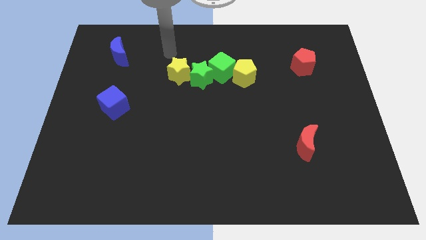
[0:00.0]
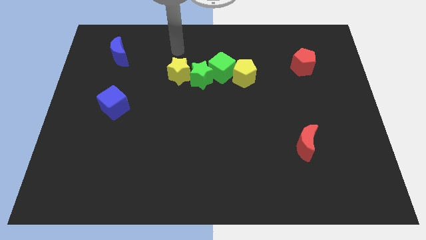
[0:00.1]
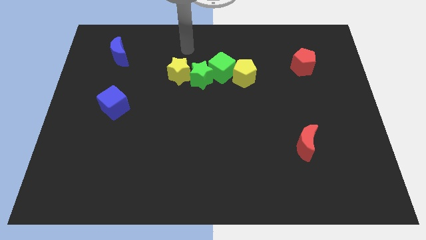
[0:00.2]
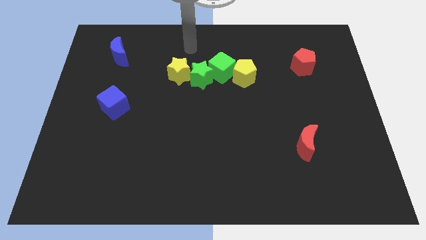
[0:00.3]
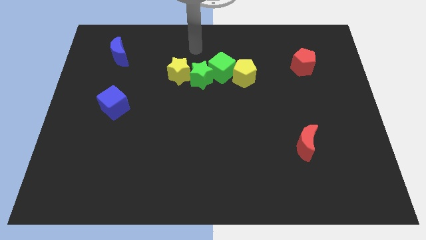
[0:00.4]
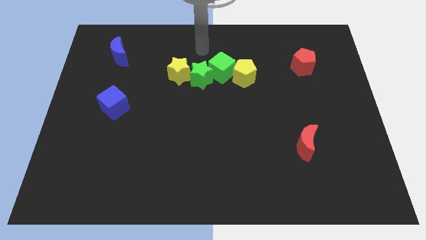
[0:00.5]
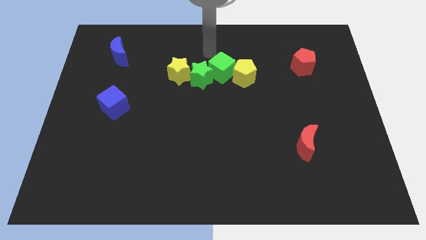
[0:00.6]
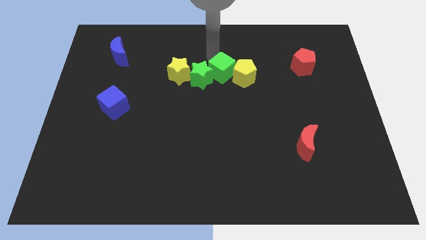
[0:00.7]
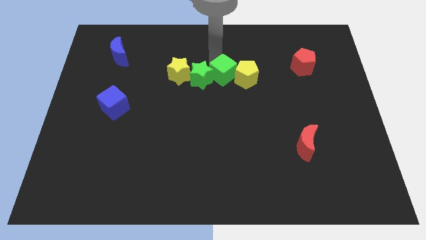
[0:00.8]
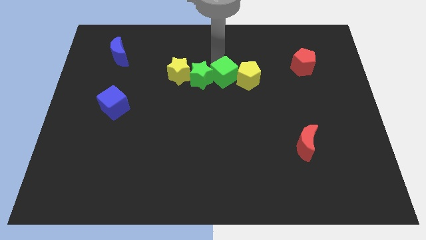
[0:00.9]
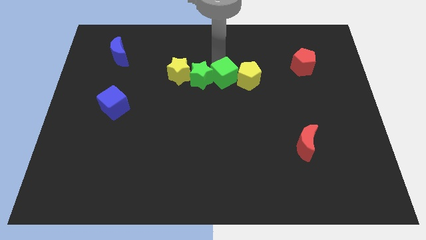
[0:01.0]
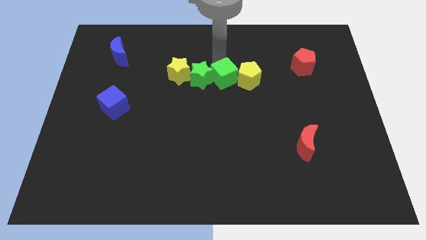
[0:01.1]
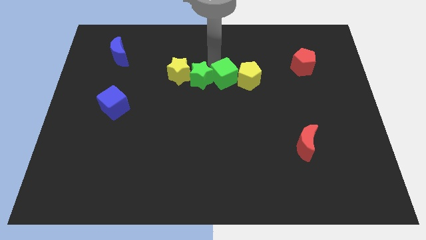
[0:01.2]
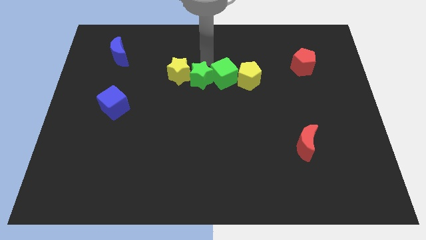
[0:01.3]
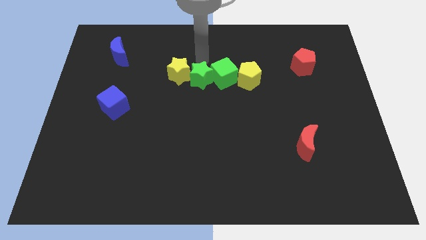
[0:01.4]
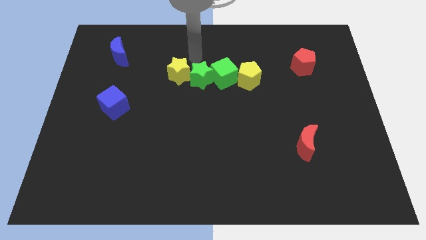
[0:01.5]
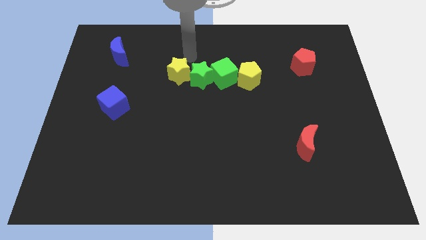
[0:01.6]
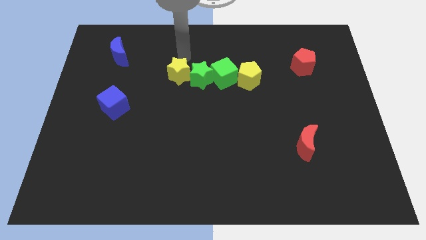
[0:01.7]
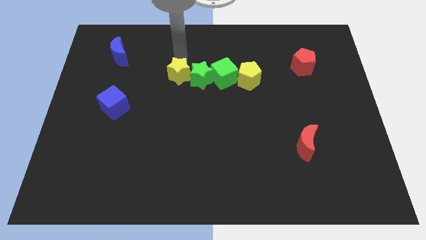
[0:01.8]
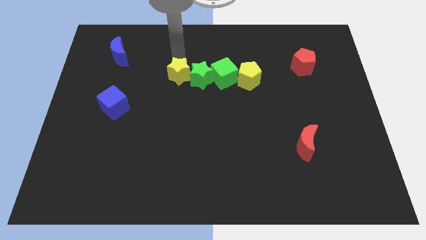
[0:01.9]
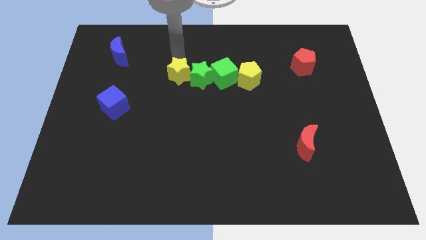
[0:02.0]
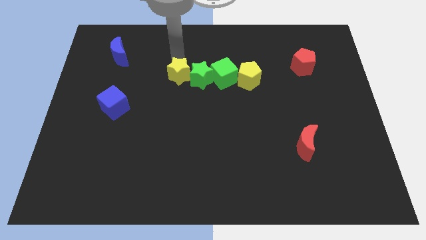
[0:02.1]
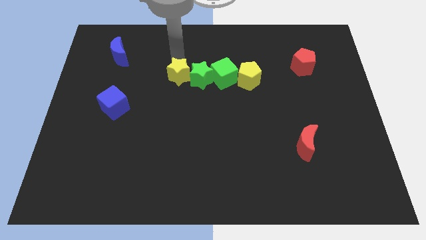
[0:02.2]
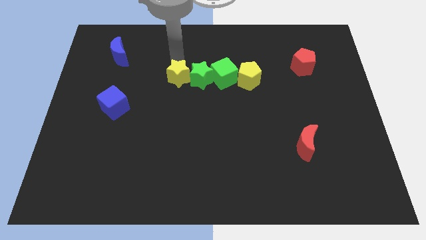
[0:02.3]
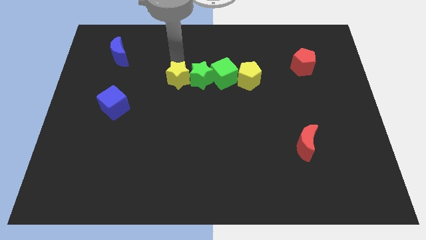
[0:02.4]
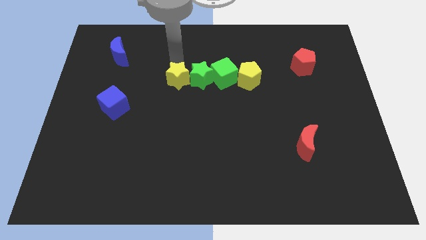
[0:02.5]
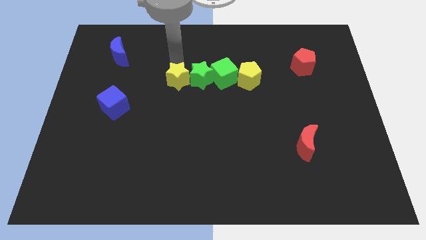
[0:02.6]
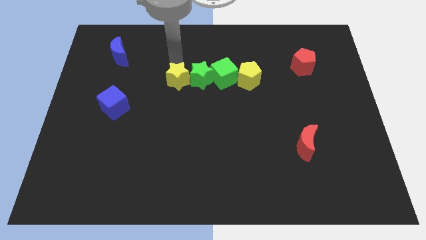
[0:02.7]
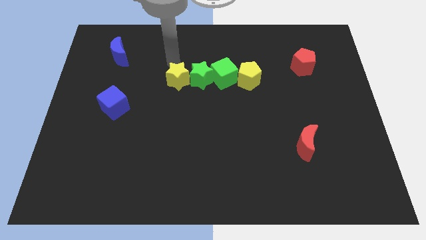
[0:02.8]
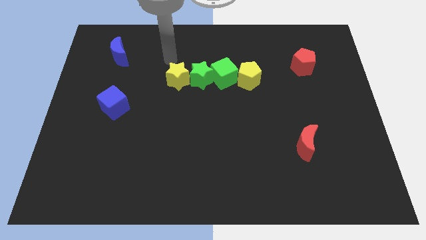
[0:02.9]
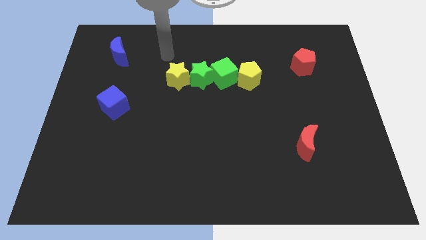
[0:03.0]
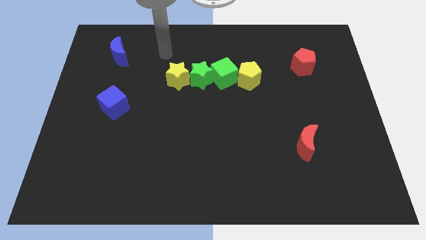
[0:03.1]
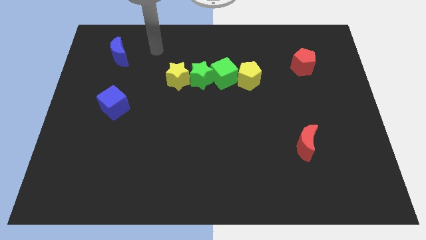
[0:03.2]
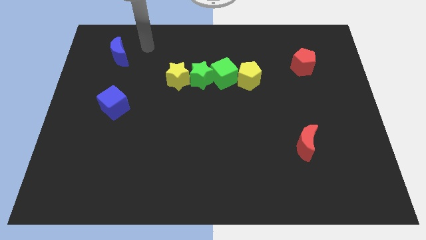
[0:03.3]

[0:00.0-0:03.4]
adjust the yellow blocks and green blocks

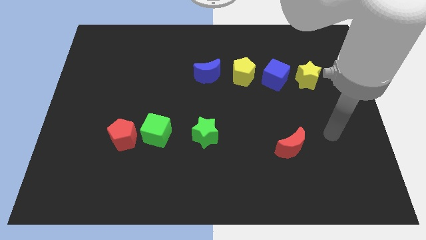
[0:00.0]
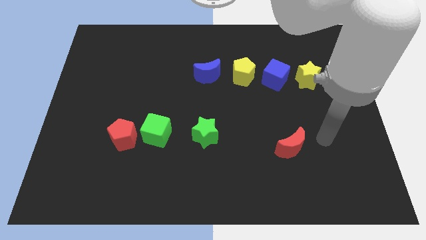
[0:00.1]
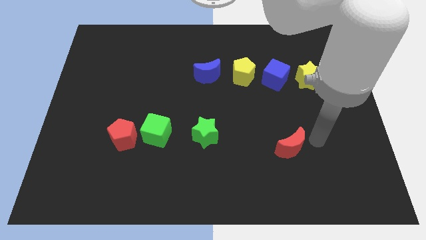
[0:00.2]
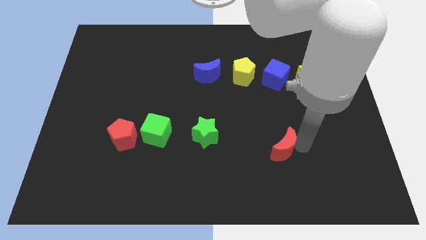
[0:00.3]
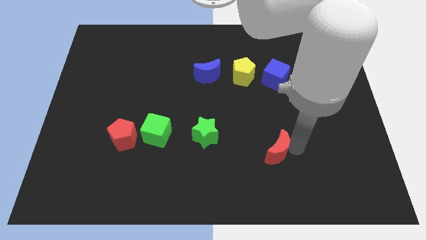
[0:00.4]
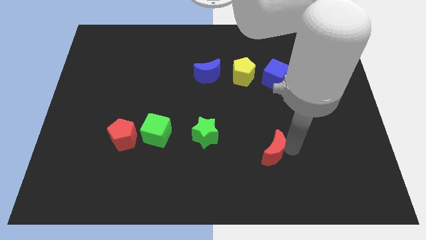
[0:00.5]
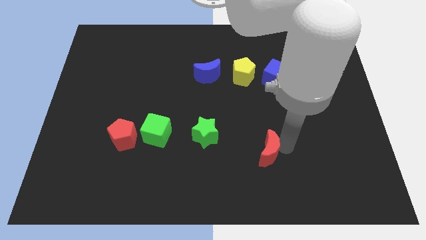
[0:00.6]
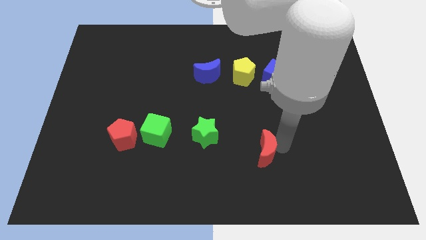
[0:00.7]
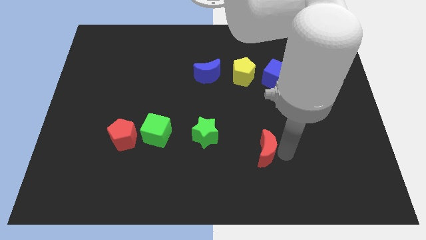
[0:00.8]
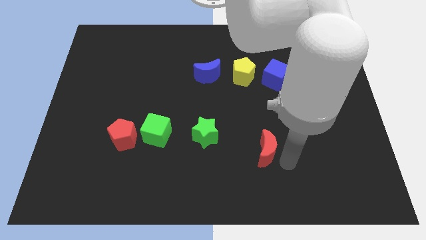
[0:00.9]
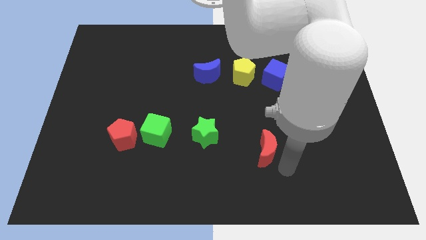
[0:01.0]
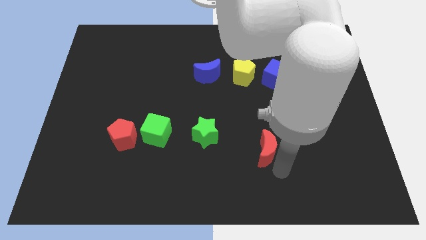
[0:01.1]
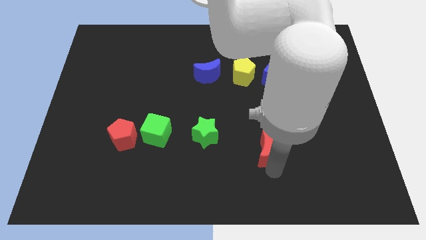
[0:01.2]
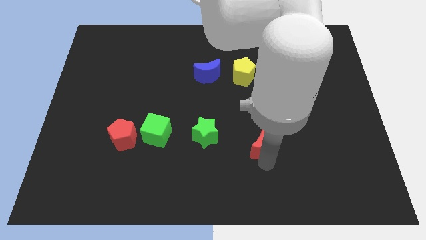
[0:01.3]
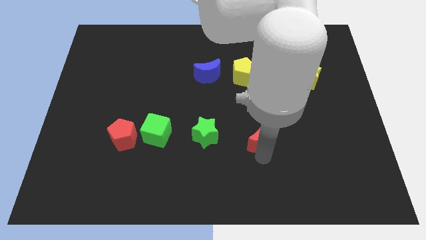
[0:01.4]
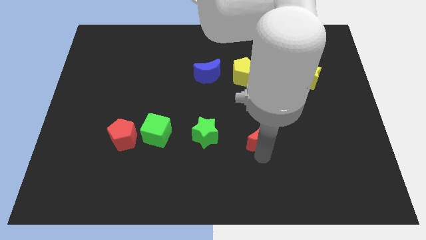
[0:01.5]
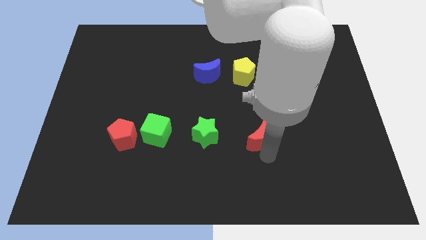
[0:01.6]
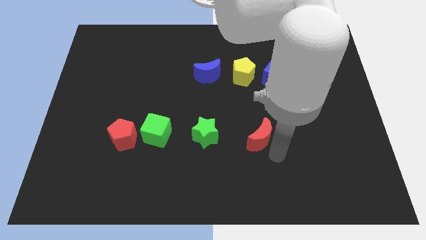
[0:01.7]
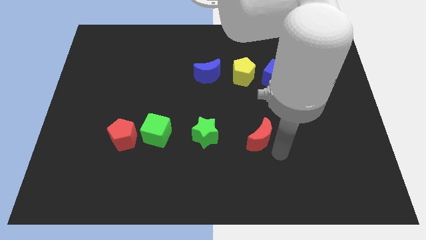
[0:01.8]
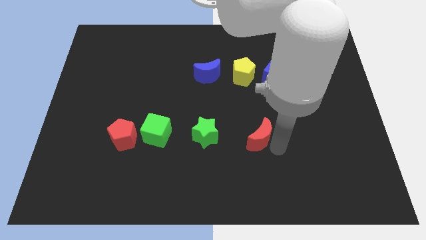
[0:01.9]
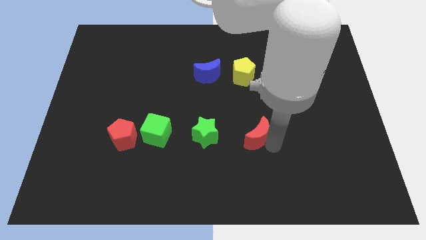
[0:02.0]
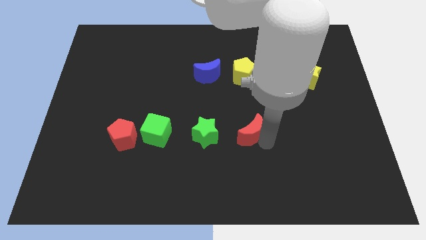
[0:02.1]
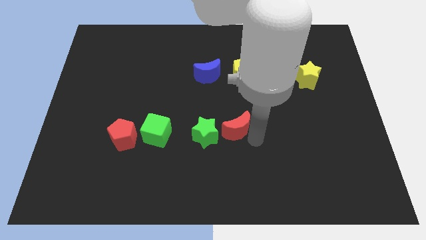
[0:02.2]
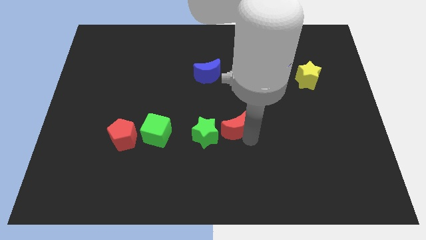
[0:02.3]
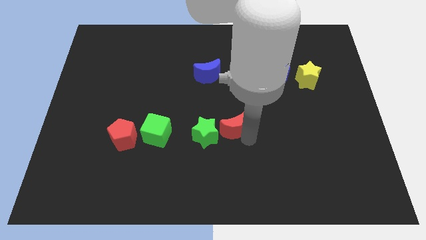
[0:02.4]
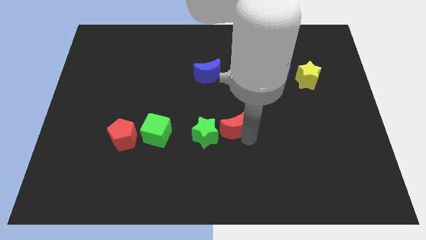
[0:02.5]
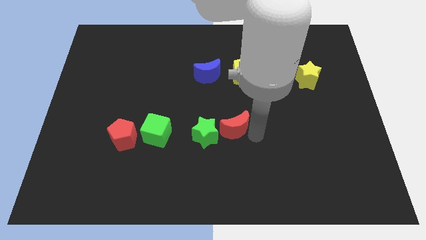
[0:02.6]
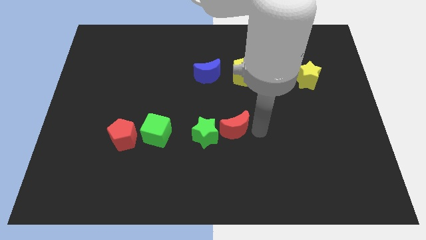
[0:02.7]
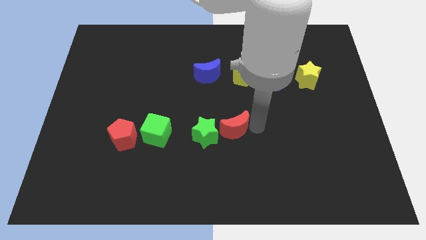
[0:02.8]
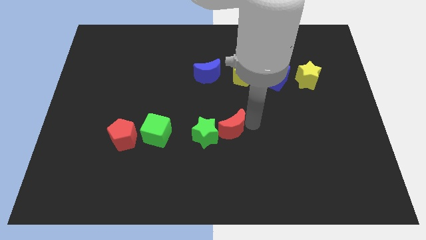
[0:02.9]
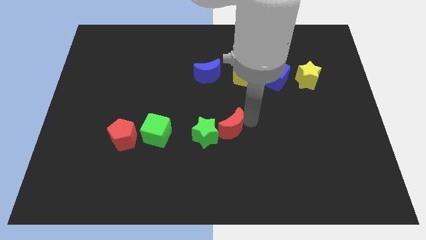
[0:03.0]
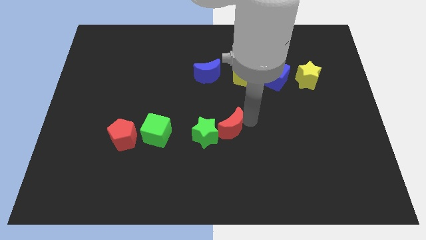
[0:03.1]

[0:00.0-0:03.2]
place red moon to the right of green star

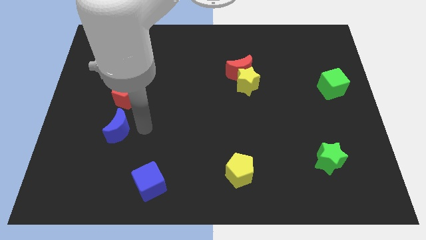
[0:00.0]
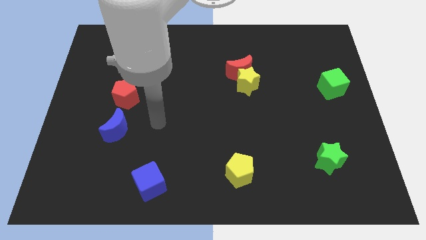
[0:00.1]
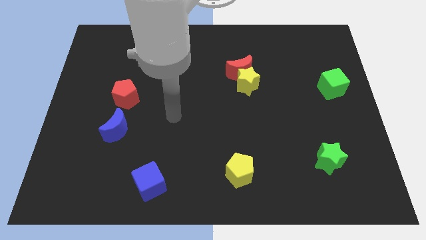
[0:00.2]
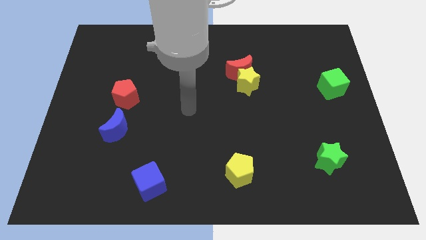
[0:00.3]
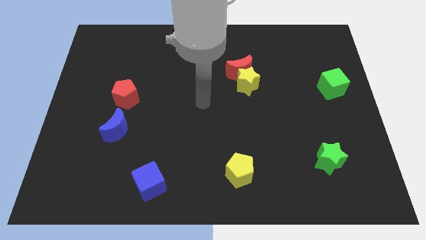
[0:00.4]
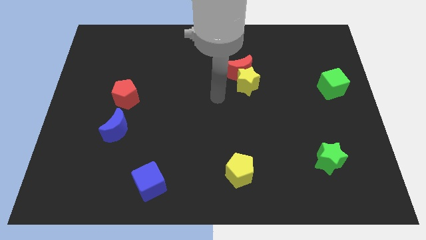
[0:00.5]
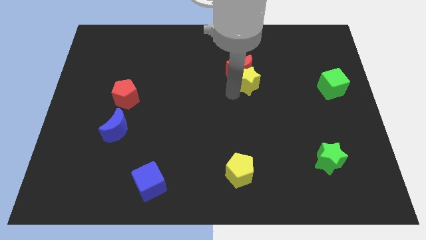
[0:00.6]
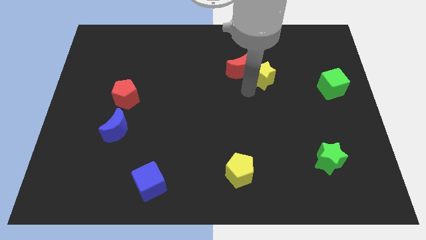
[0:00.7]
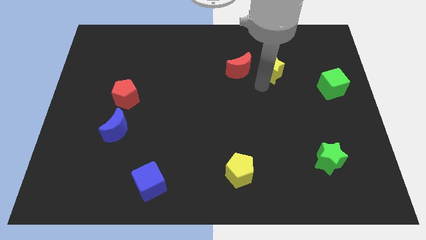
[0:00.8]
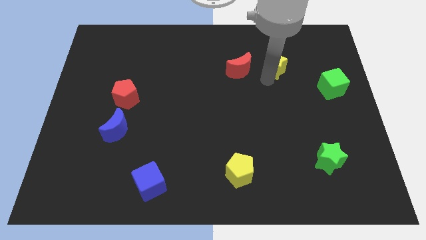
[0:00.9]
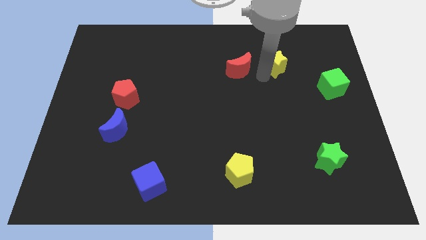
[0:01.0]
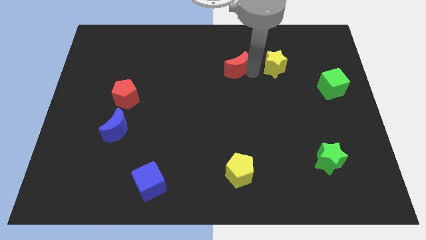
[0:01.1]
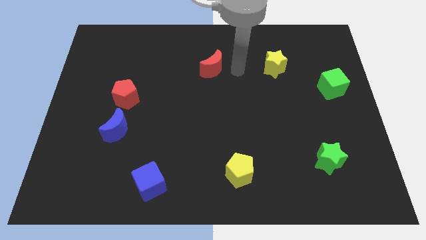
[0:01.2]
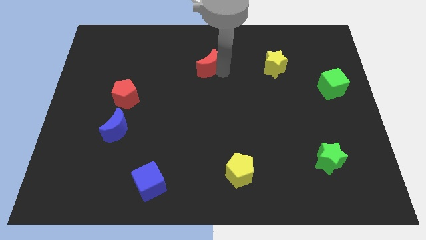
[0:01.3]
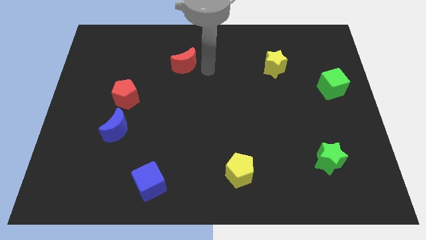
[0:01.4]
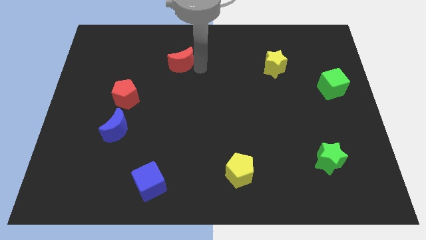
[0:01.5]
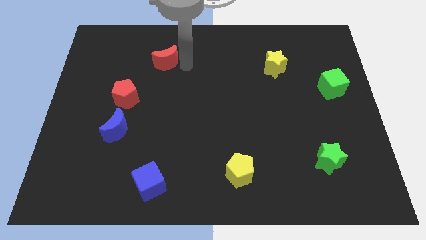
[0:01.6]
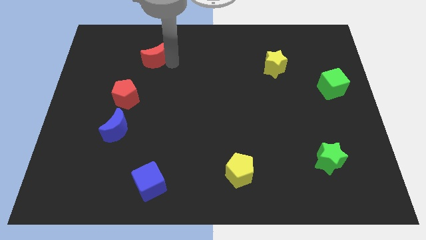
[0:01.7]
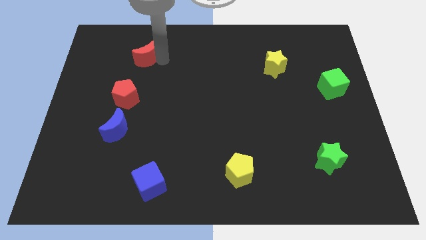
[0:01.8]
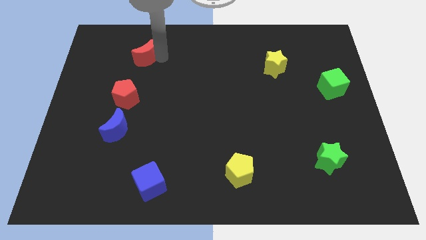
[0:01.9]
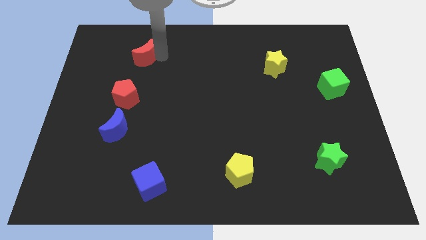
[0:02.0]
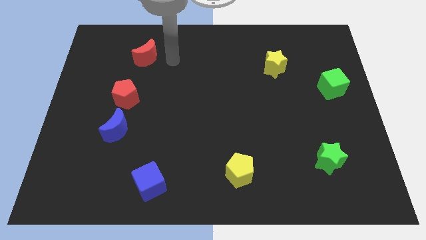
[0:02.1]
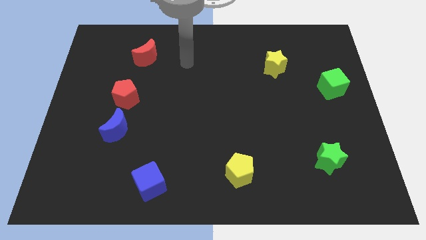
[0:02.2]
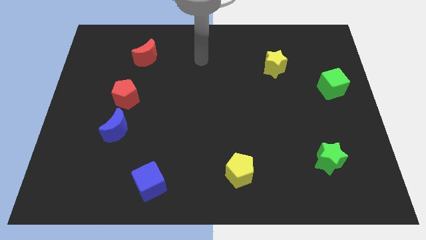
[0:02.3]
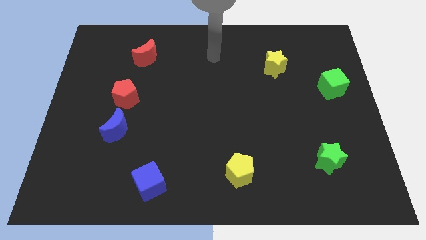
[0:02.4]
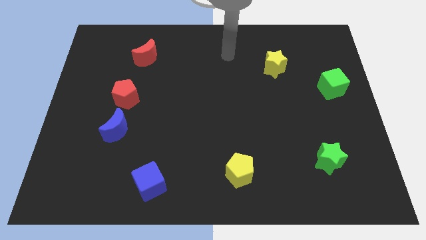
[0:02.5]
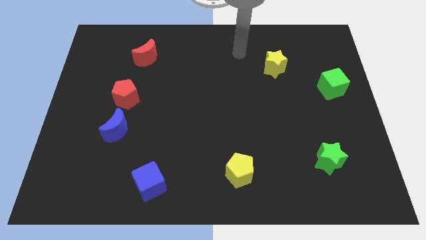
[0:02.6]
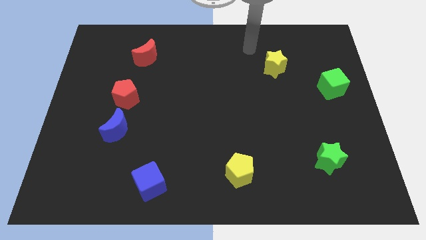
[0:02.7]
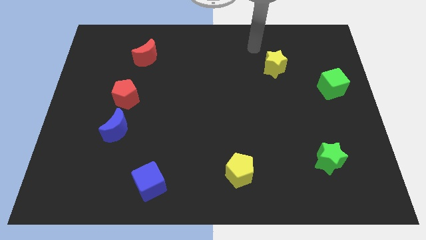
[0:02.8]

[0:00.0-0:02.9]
push the red crescent above the red pentagon
